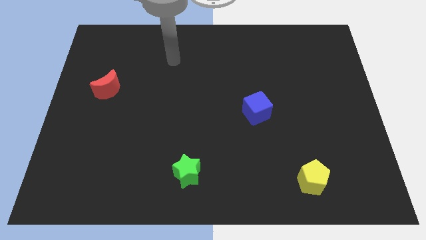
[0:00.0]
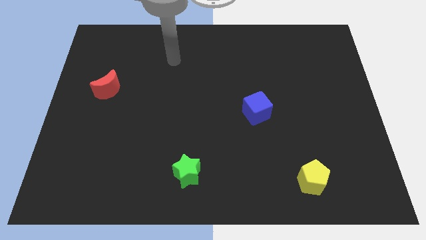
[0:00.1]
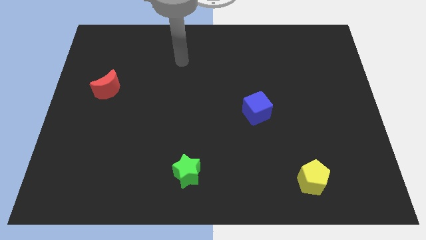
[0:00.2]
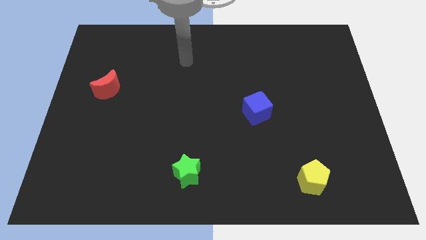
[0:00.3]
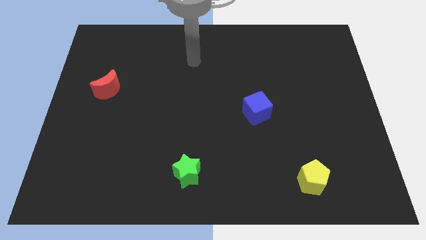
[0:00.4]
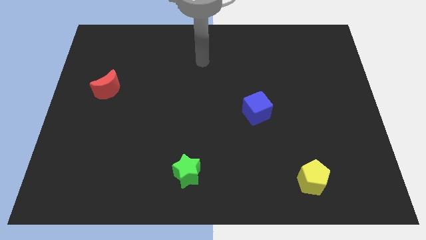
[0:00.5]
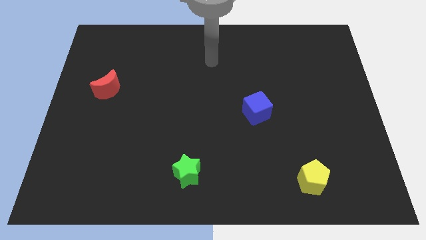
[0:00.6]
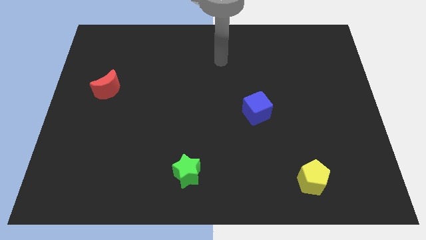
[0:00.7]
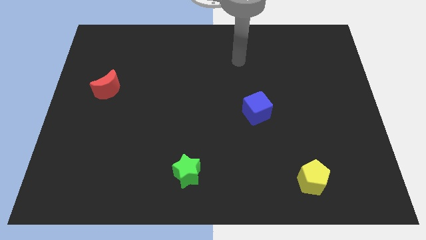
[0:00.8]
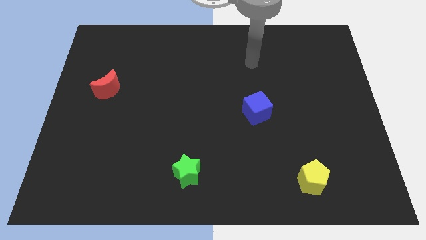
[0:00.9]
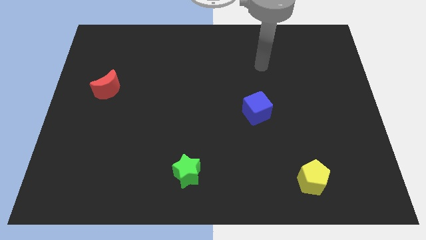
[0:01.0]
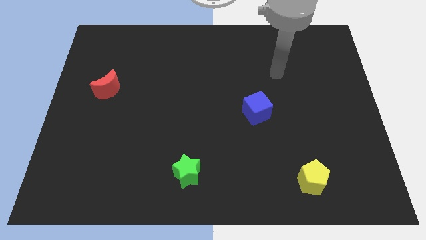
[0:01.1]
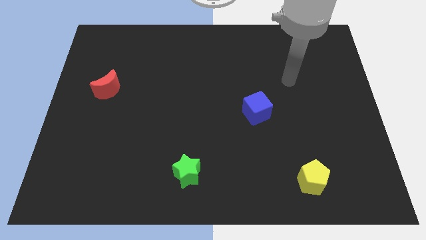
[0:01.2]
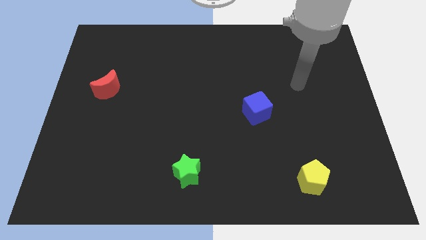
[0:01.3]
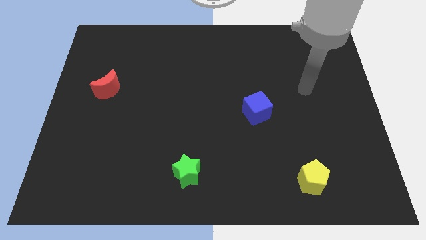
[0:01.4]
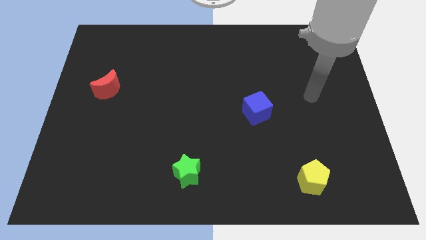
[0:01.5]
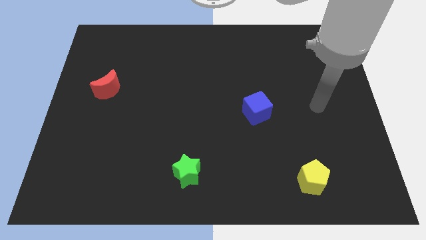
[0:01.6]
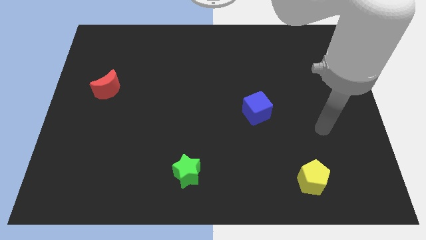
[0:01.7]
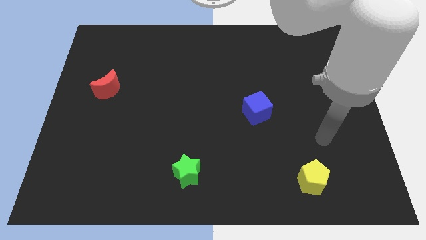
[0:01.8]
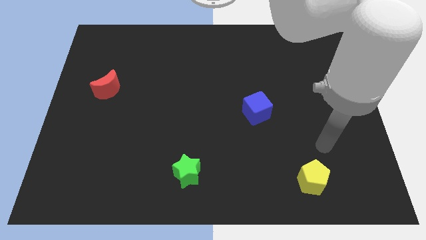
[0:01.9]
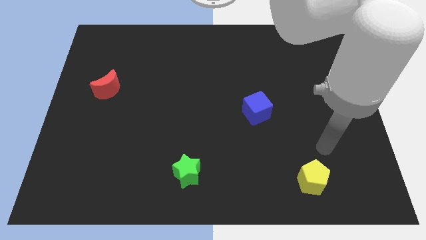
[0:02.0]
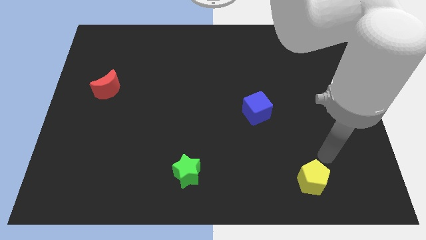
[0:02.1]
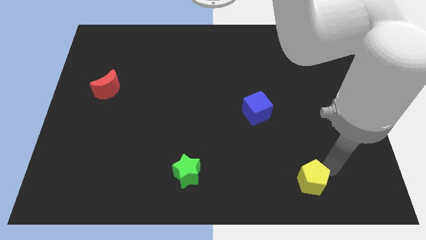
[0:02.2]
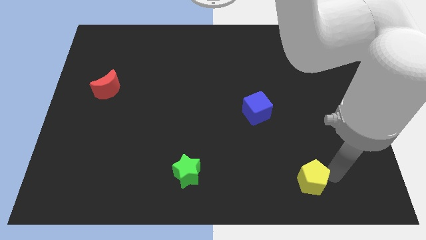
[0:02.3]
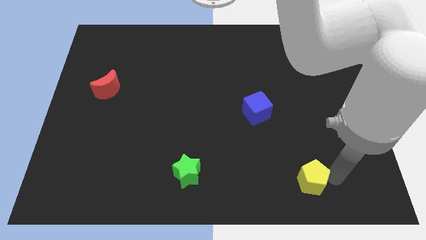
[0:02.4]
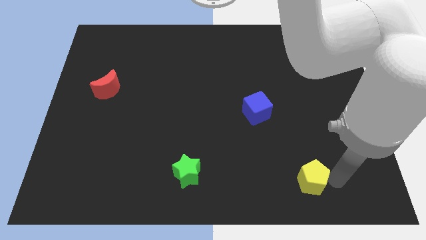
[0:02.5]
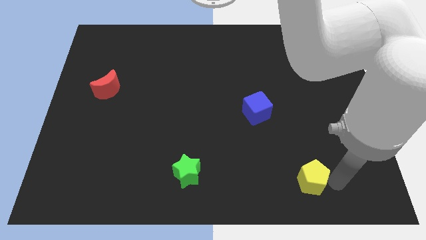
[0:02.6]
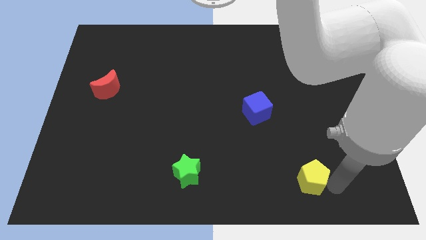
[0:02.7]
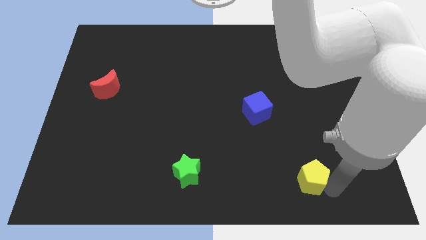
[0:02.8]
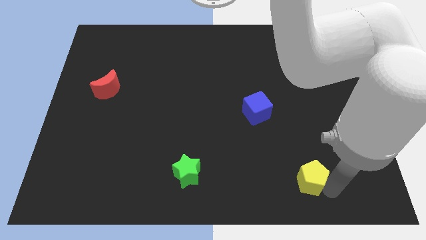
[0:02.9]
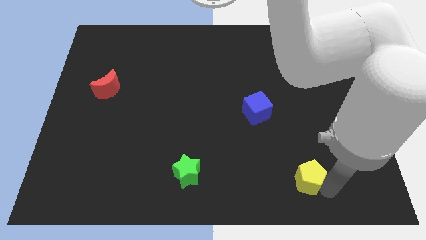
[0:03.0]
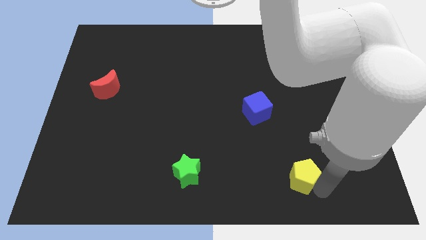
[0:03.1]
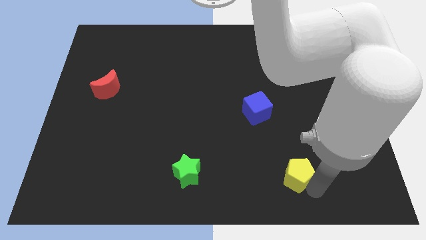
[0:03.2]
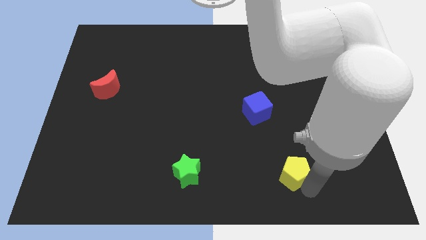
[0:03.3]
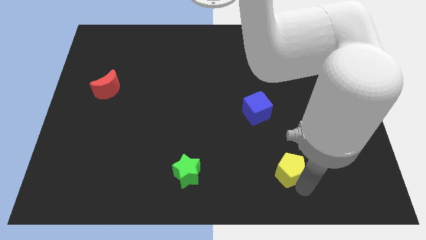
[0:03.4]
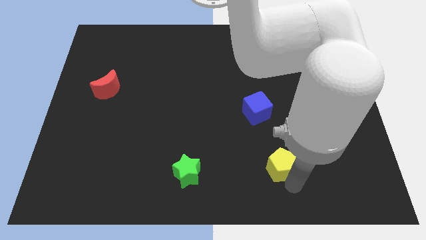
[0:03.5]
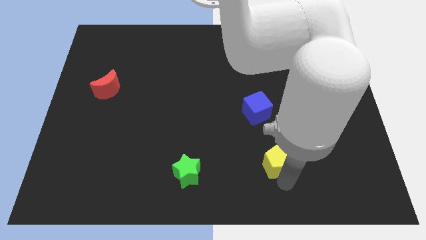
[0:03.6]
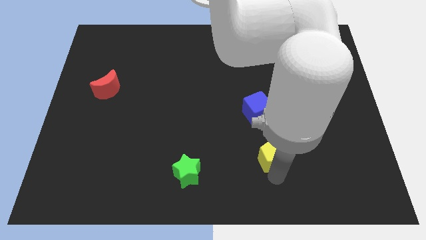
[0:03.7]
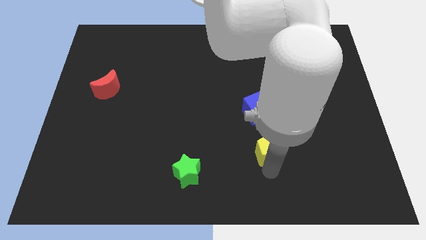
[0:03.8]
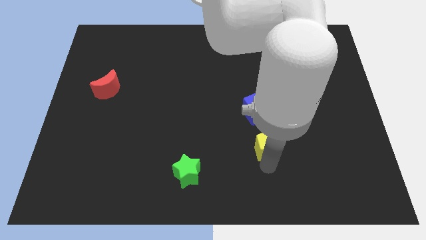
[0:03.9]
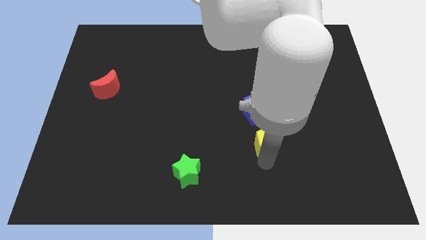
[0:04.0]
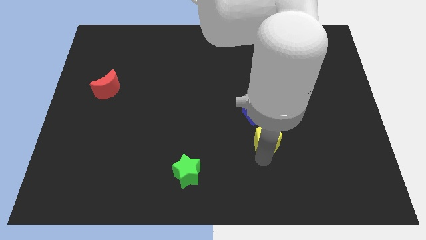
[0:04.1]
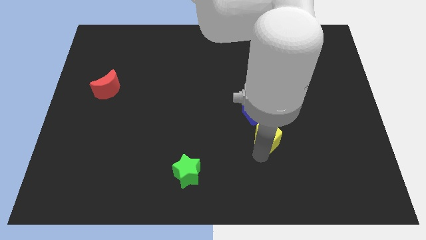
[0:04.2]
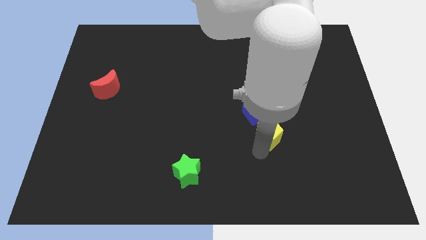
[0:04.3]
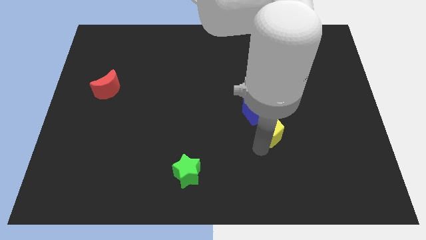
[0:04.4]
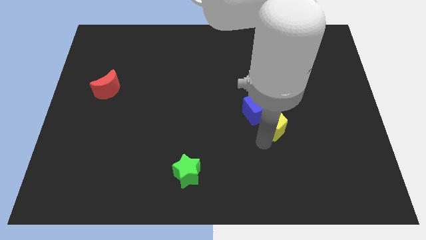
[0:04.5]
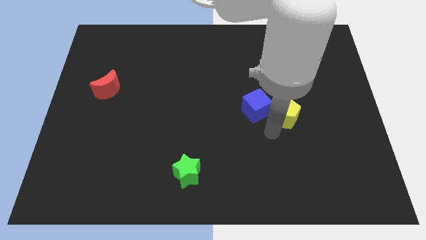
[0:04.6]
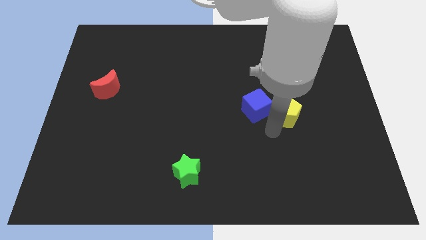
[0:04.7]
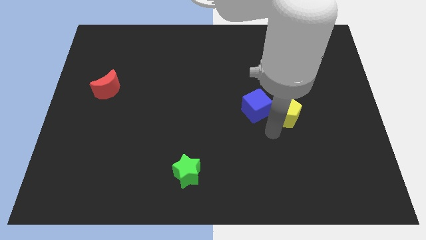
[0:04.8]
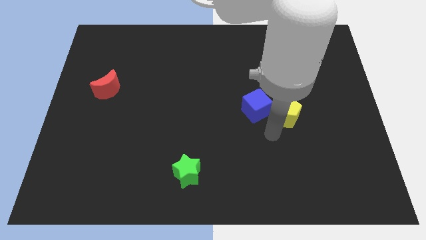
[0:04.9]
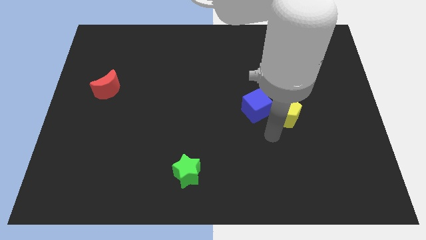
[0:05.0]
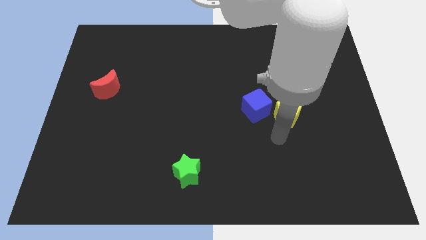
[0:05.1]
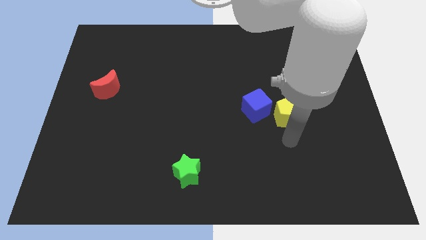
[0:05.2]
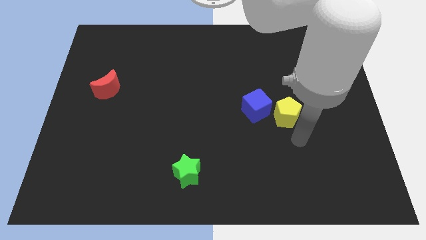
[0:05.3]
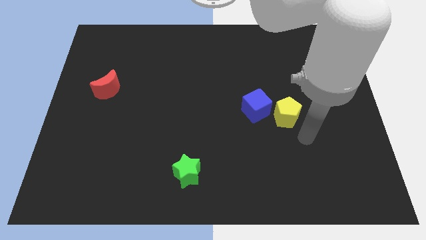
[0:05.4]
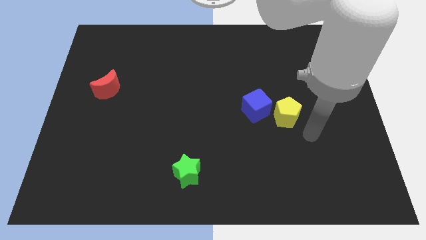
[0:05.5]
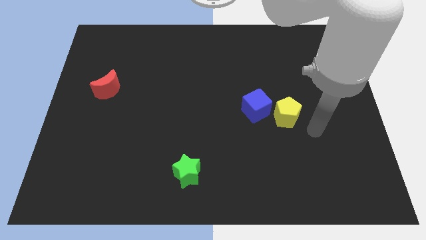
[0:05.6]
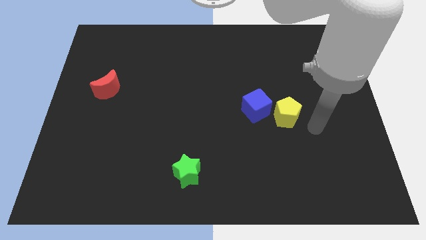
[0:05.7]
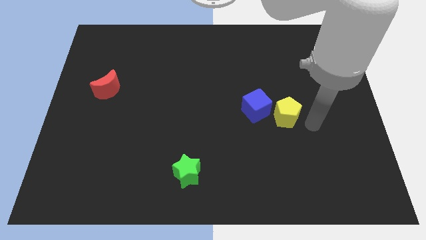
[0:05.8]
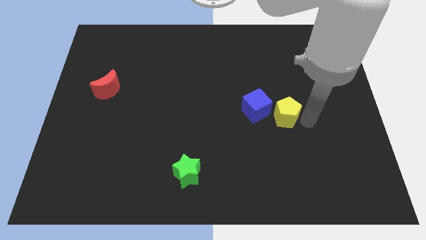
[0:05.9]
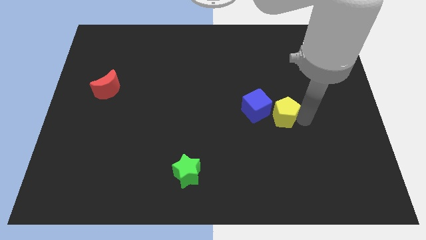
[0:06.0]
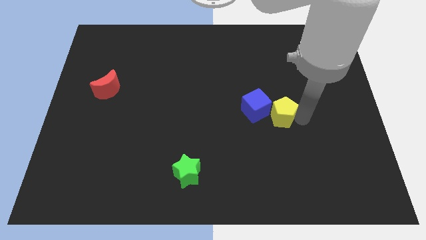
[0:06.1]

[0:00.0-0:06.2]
slide the pentagon towards the cube

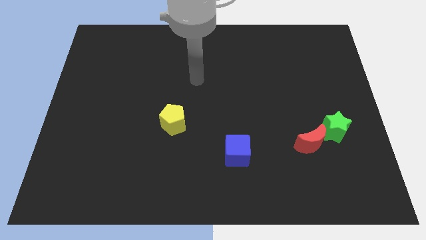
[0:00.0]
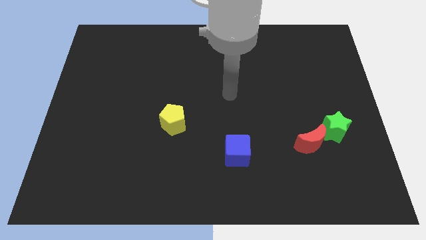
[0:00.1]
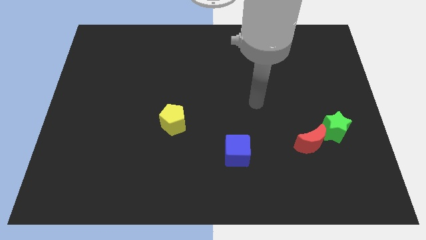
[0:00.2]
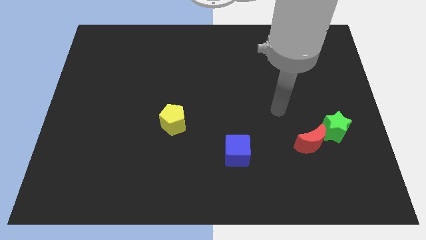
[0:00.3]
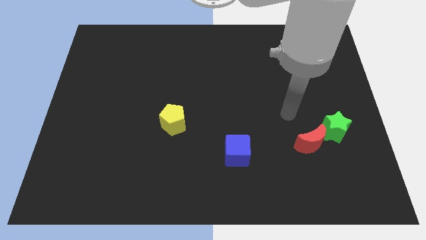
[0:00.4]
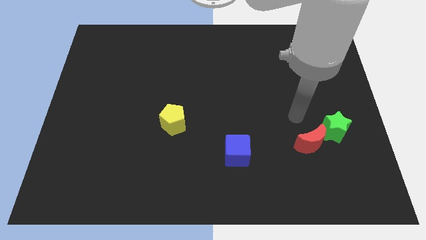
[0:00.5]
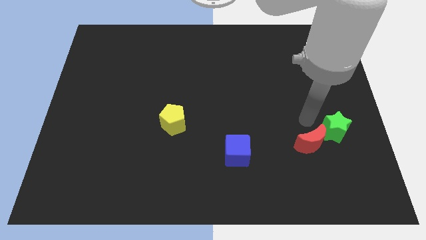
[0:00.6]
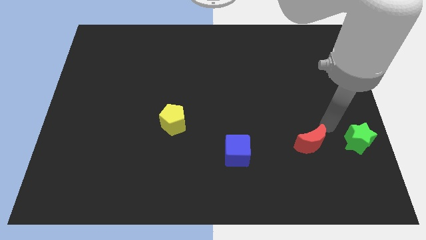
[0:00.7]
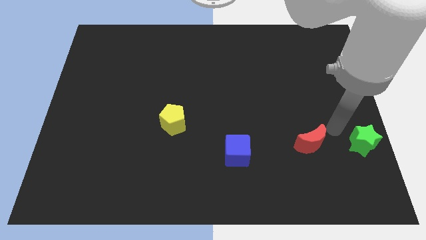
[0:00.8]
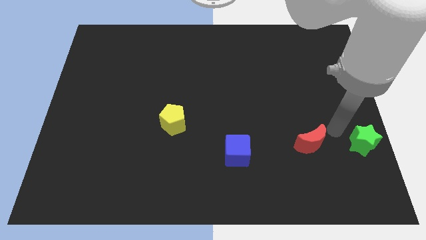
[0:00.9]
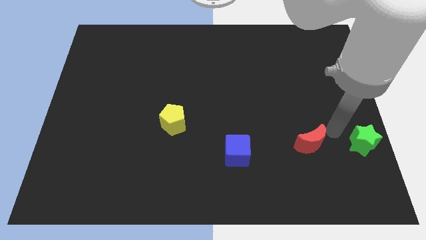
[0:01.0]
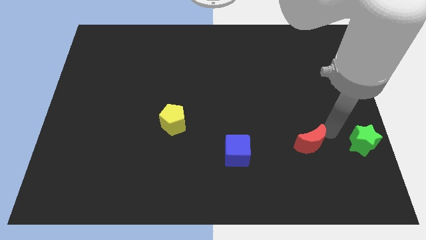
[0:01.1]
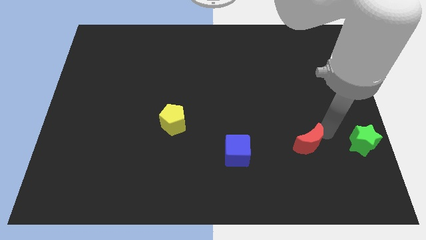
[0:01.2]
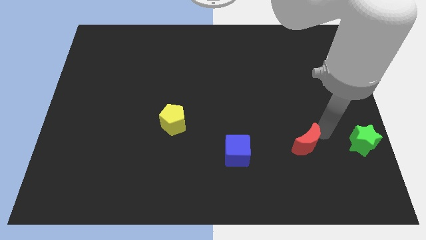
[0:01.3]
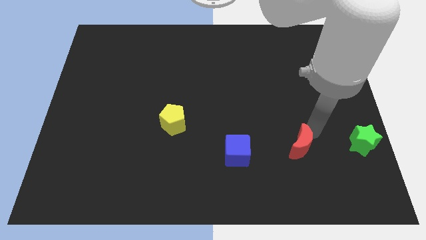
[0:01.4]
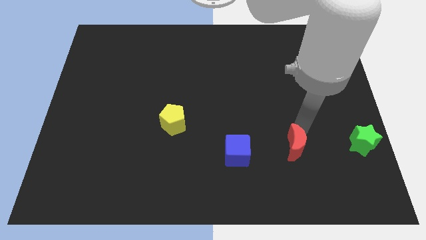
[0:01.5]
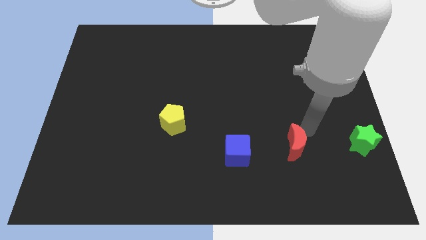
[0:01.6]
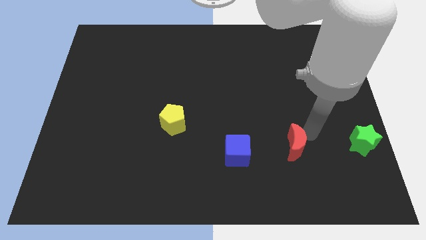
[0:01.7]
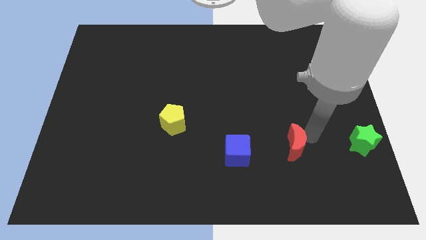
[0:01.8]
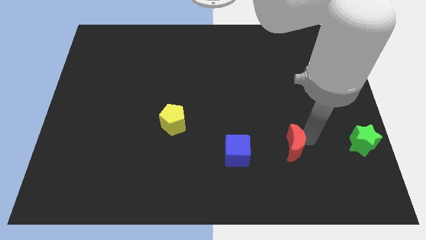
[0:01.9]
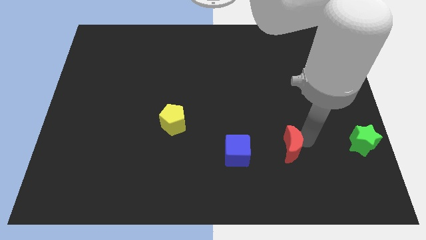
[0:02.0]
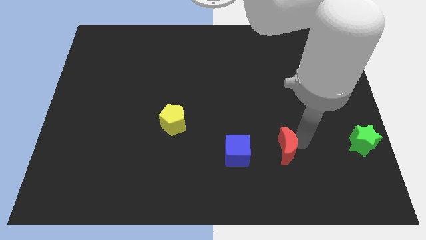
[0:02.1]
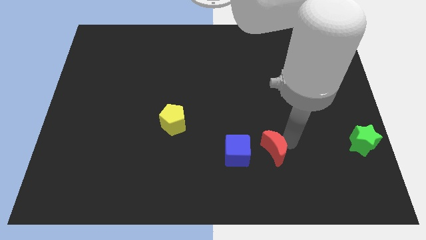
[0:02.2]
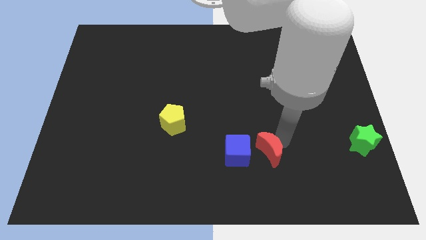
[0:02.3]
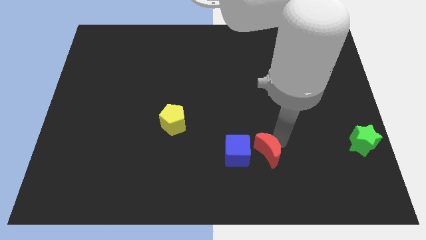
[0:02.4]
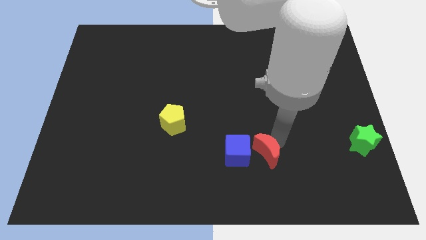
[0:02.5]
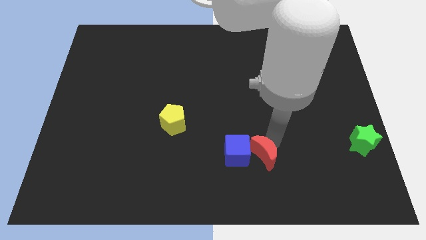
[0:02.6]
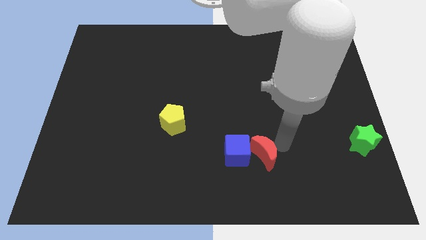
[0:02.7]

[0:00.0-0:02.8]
push the red block close to the cube
